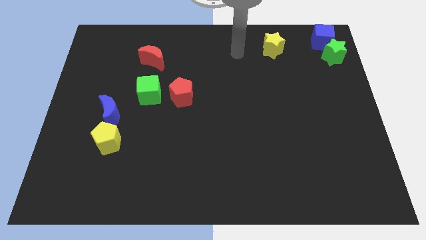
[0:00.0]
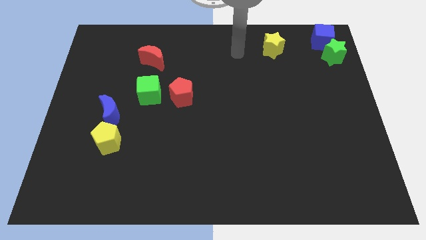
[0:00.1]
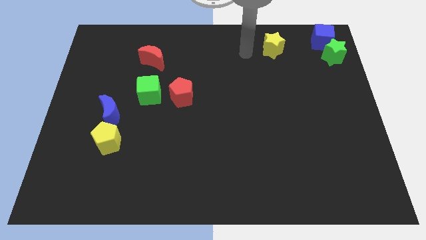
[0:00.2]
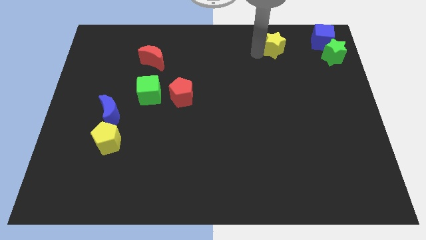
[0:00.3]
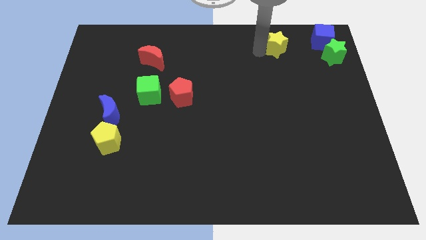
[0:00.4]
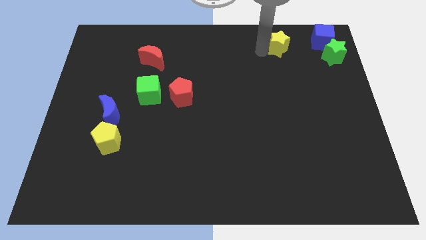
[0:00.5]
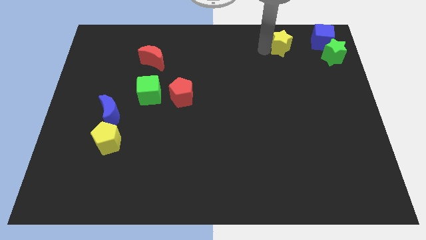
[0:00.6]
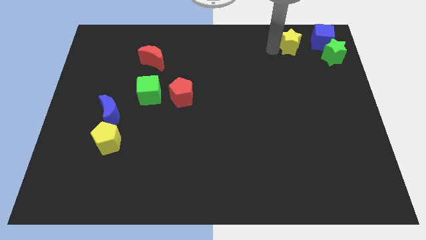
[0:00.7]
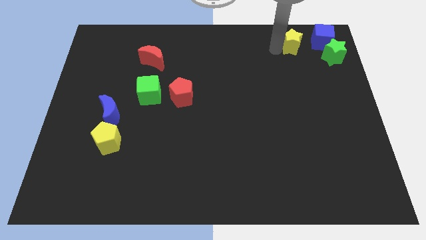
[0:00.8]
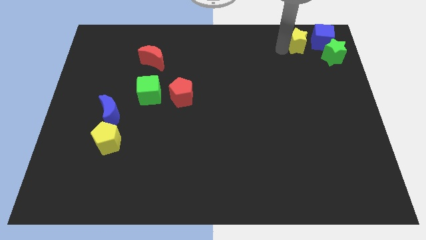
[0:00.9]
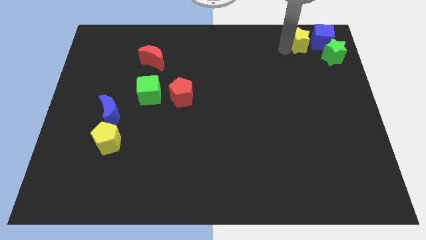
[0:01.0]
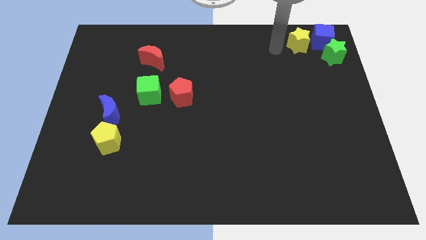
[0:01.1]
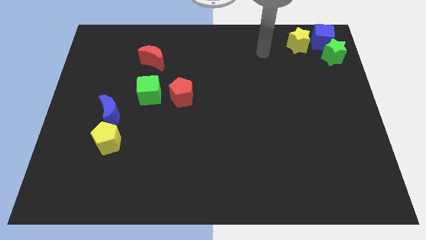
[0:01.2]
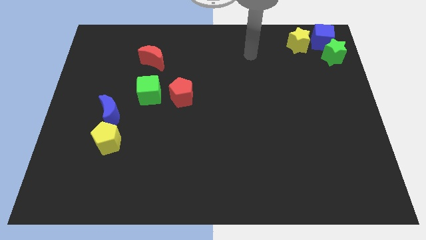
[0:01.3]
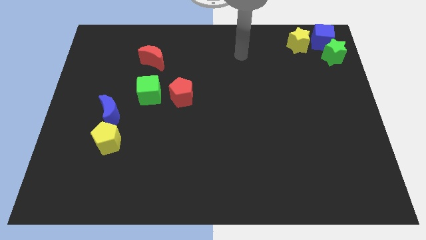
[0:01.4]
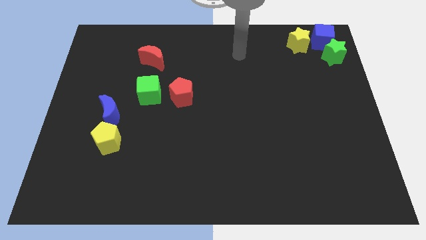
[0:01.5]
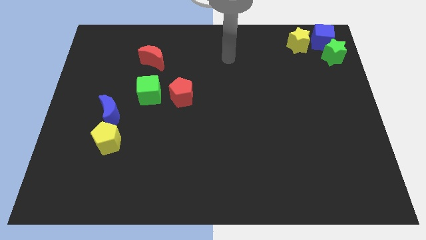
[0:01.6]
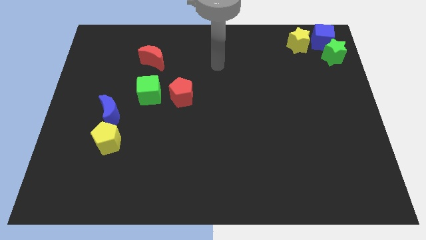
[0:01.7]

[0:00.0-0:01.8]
push the yellow star close to the blue cube

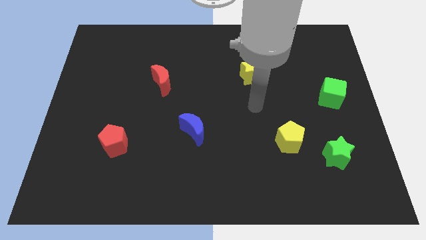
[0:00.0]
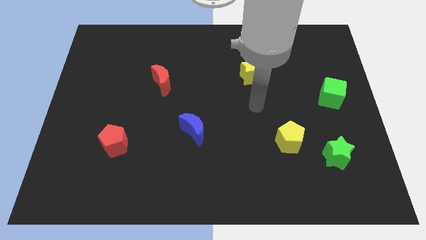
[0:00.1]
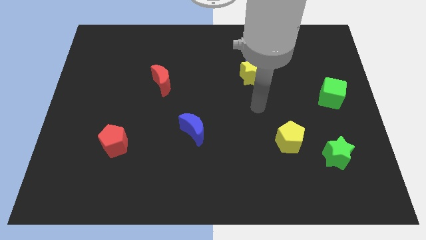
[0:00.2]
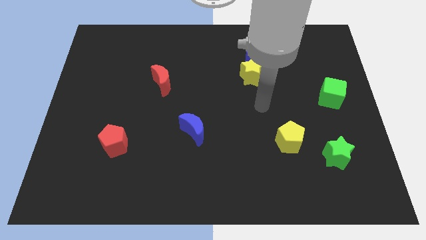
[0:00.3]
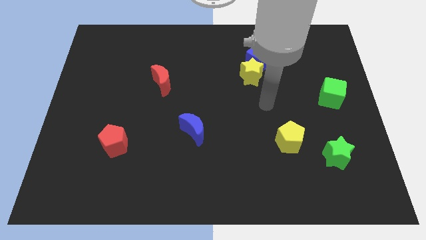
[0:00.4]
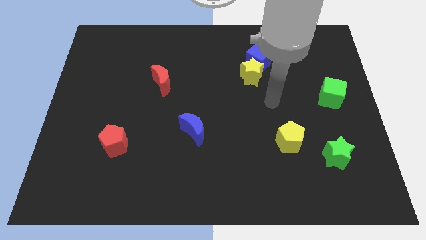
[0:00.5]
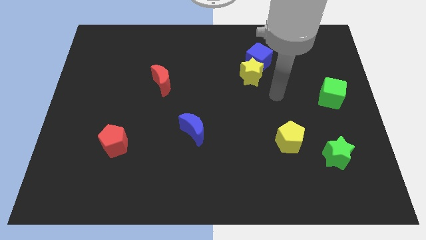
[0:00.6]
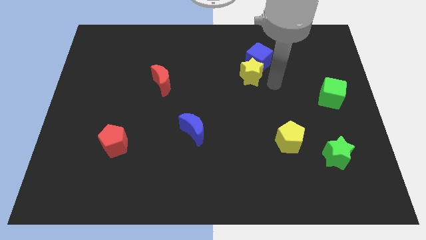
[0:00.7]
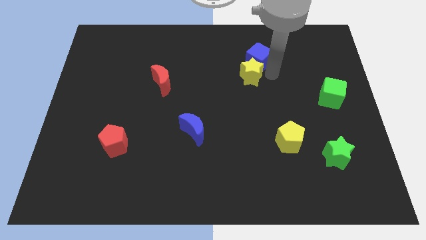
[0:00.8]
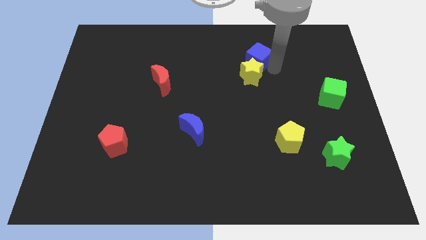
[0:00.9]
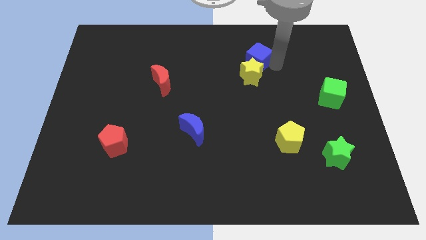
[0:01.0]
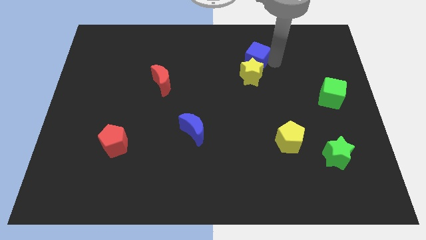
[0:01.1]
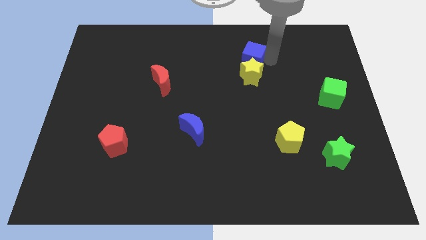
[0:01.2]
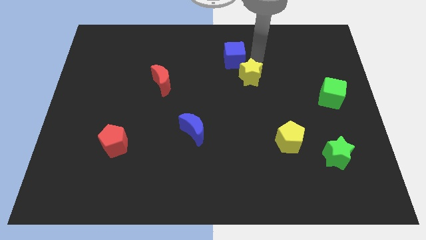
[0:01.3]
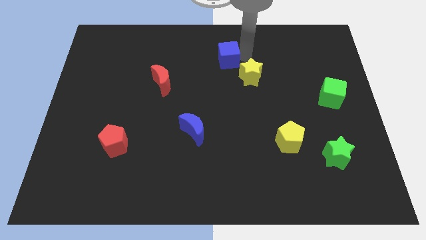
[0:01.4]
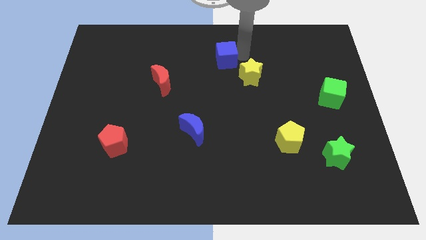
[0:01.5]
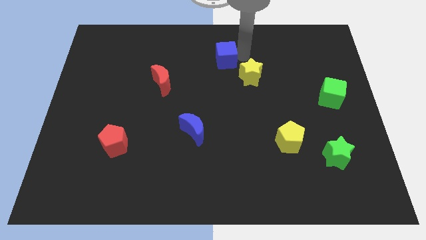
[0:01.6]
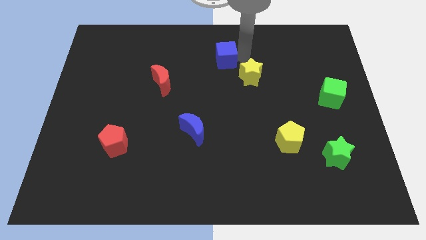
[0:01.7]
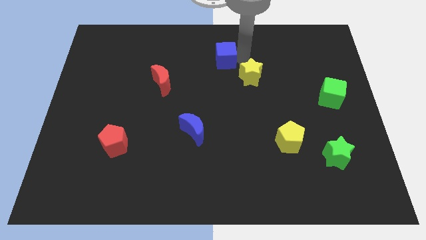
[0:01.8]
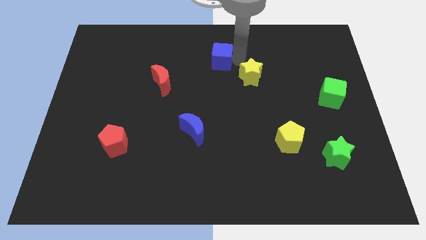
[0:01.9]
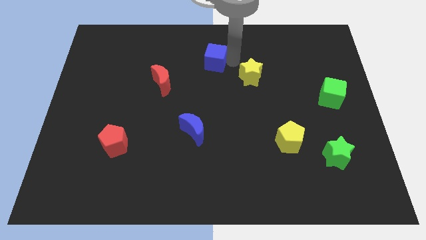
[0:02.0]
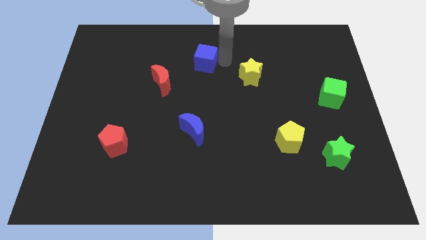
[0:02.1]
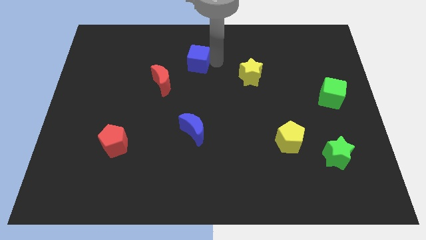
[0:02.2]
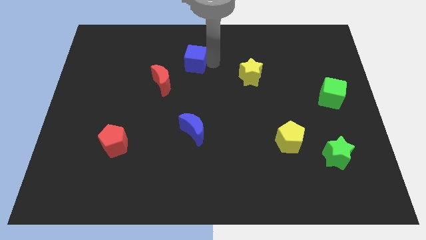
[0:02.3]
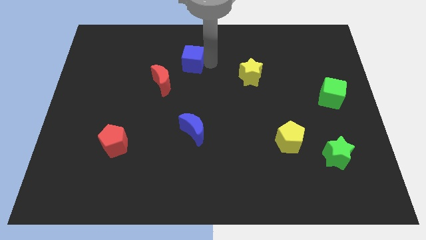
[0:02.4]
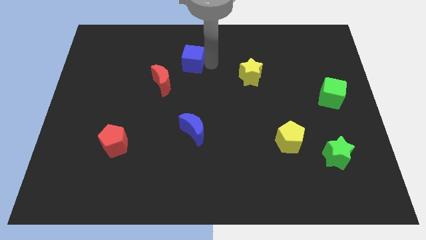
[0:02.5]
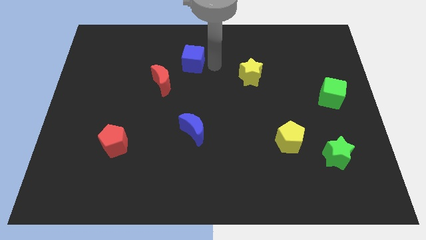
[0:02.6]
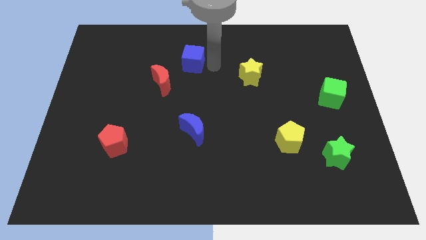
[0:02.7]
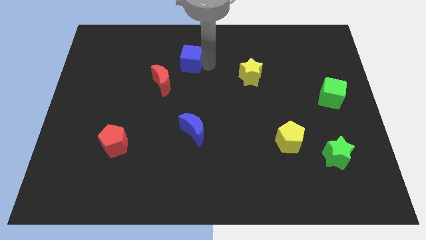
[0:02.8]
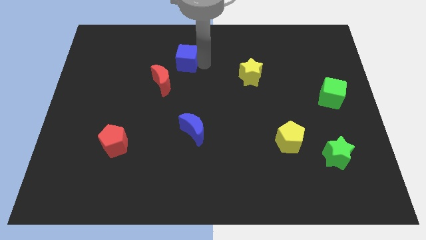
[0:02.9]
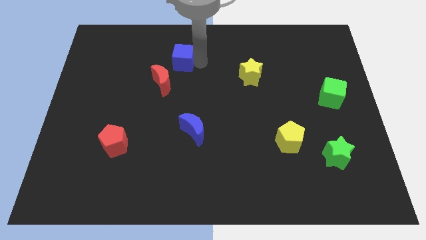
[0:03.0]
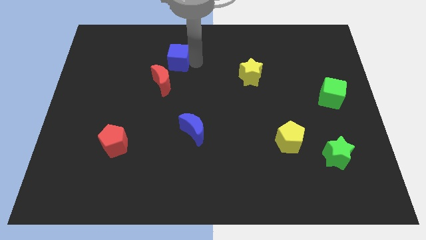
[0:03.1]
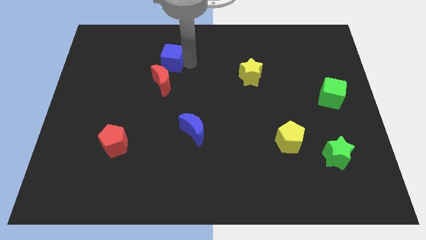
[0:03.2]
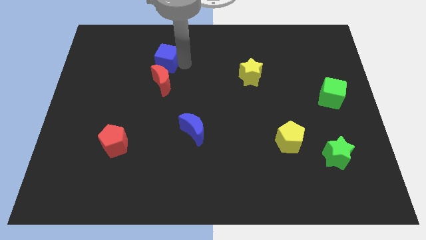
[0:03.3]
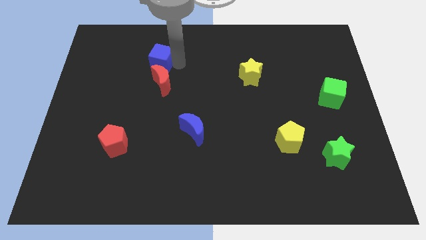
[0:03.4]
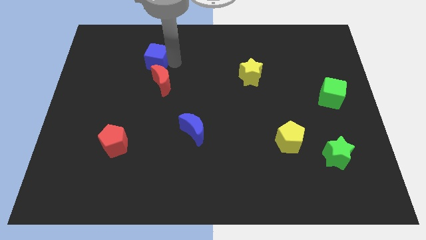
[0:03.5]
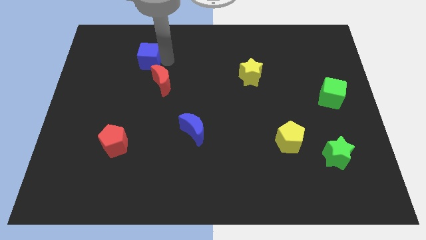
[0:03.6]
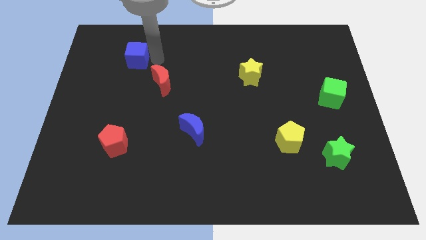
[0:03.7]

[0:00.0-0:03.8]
move the blue cube towards the top of the red crescent

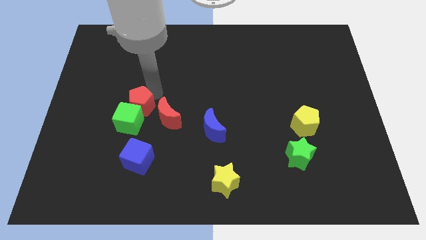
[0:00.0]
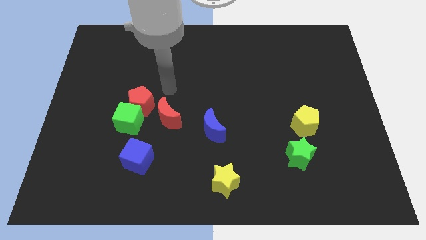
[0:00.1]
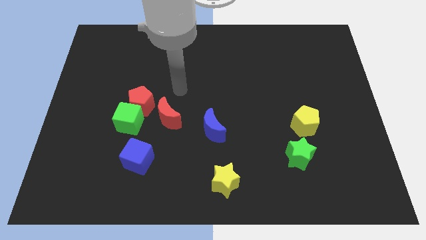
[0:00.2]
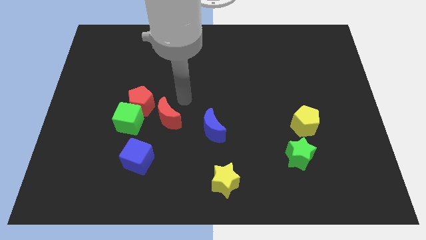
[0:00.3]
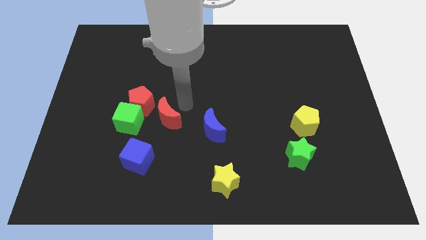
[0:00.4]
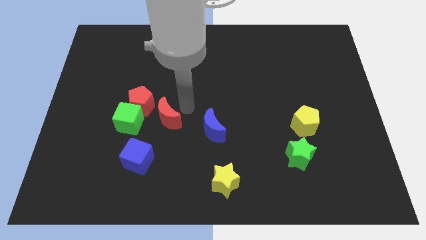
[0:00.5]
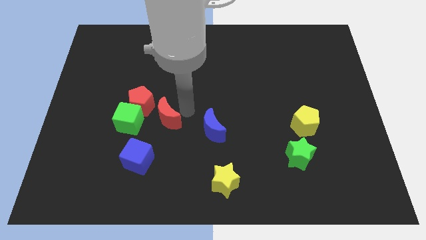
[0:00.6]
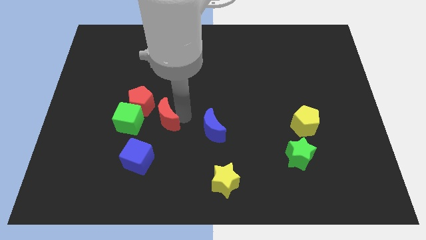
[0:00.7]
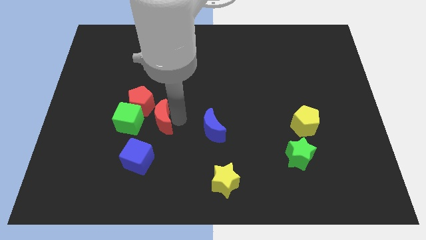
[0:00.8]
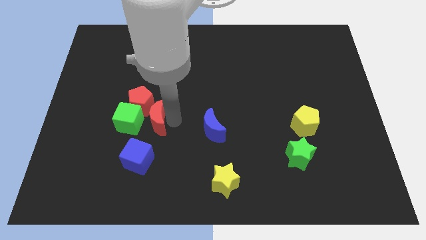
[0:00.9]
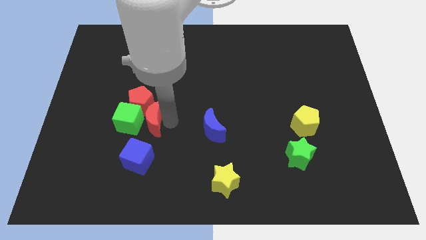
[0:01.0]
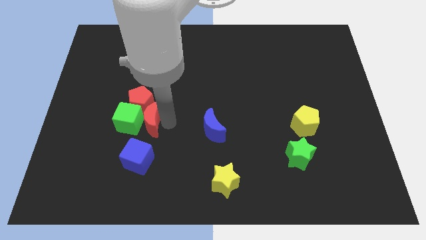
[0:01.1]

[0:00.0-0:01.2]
move red moon close to green cube

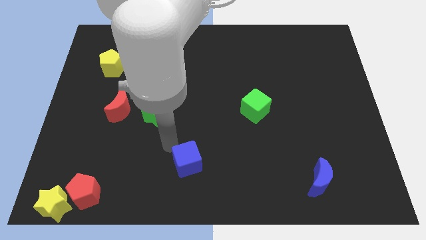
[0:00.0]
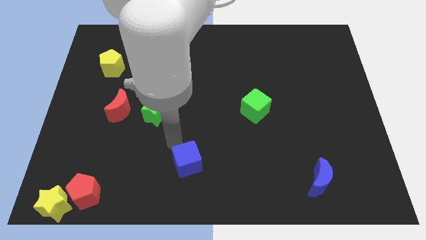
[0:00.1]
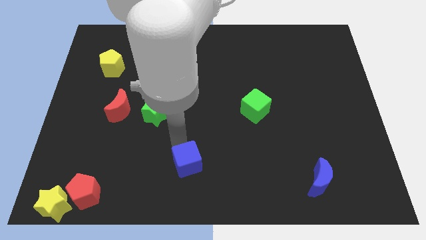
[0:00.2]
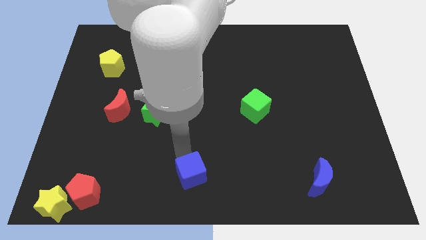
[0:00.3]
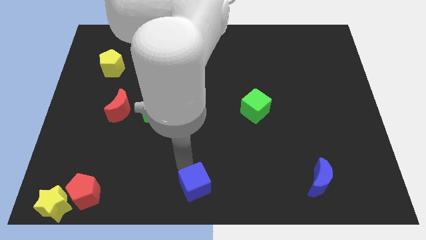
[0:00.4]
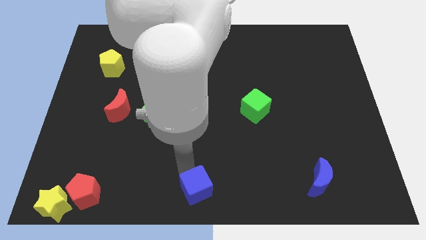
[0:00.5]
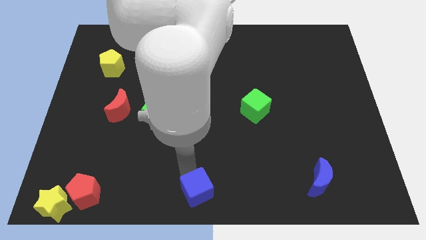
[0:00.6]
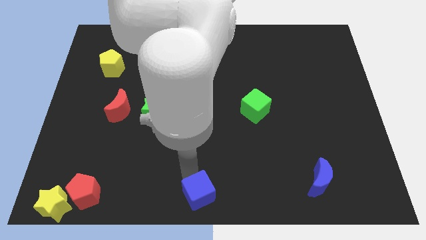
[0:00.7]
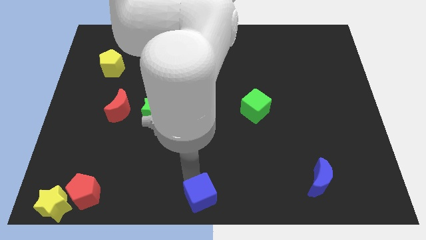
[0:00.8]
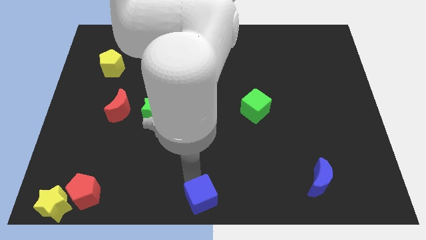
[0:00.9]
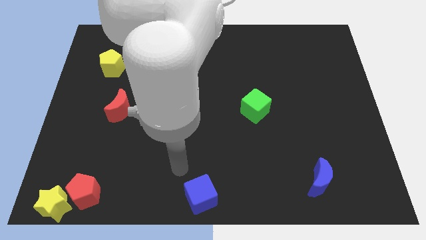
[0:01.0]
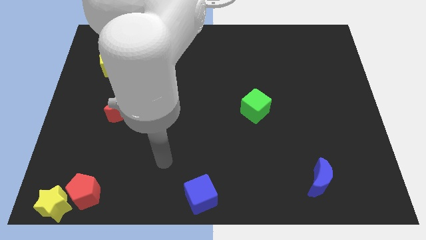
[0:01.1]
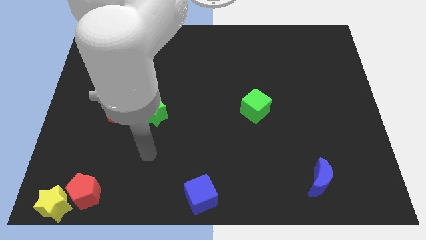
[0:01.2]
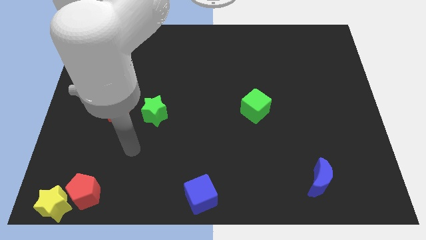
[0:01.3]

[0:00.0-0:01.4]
slightly push the blue cube to the bottom center

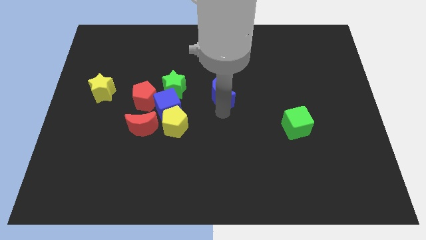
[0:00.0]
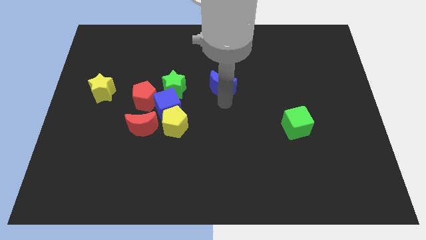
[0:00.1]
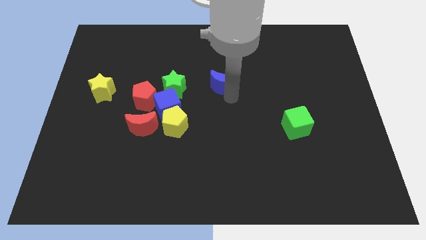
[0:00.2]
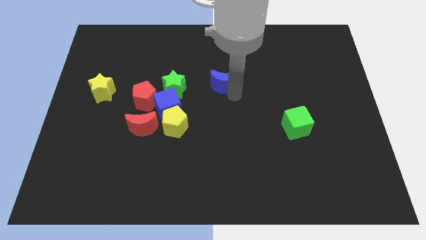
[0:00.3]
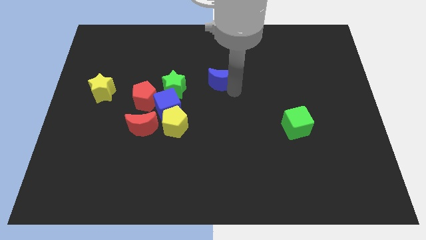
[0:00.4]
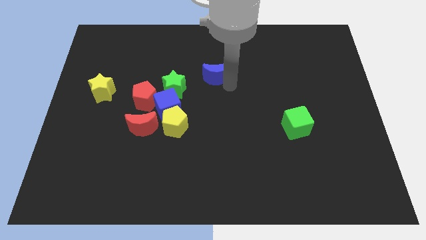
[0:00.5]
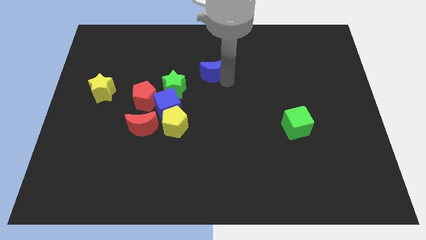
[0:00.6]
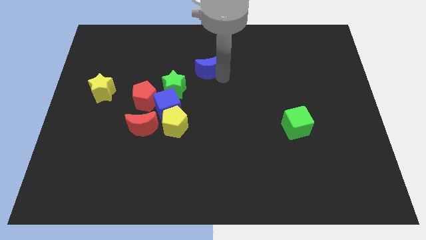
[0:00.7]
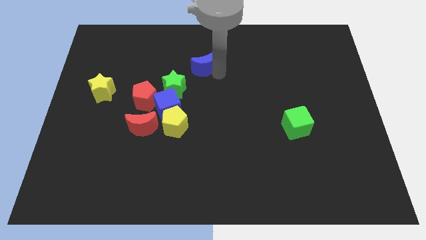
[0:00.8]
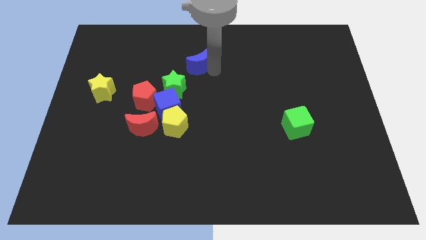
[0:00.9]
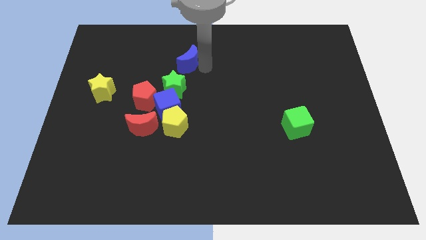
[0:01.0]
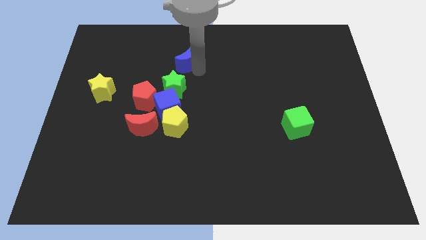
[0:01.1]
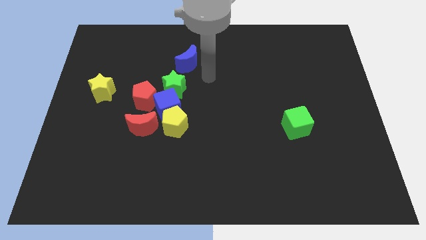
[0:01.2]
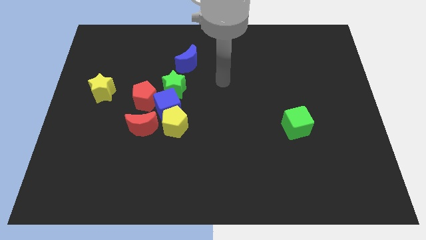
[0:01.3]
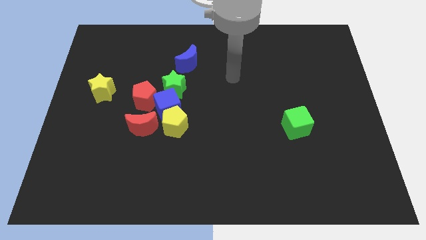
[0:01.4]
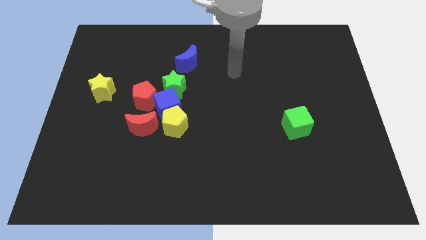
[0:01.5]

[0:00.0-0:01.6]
move the blue crescent to the top of the green star
